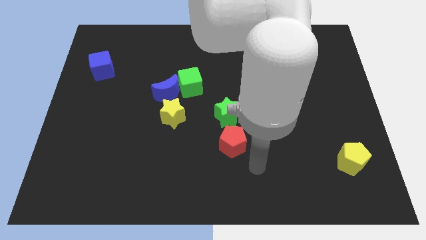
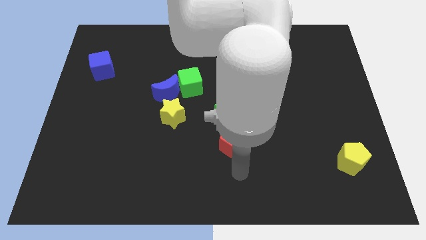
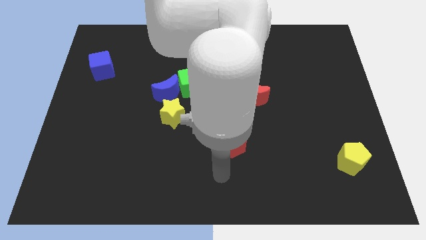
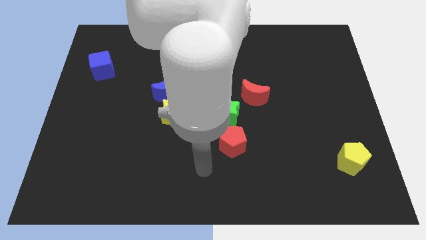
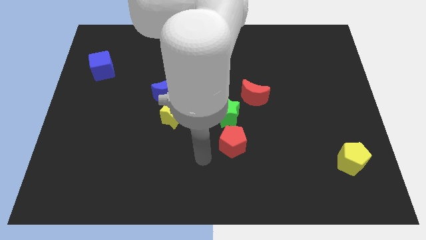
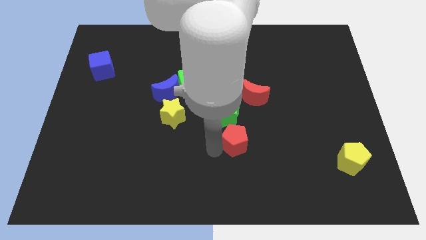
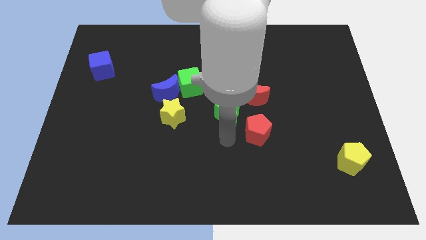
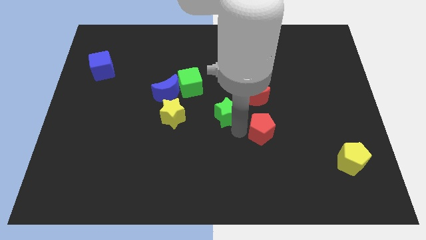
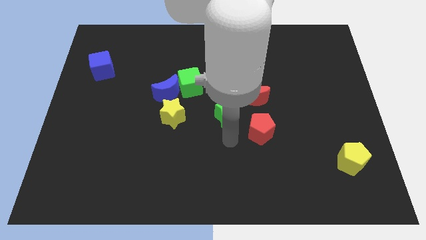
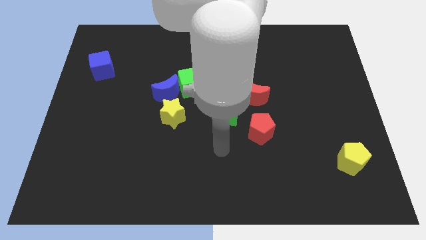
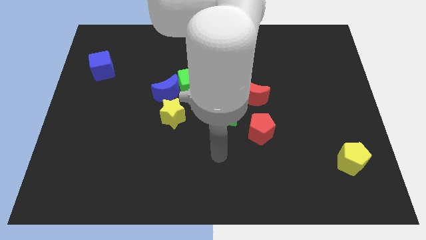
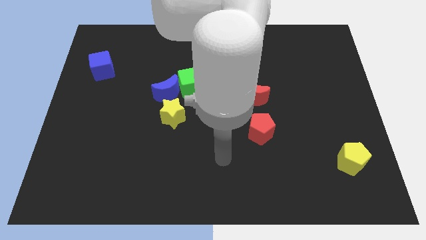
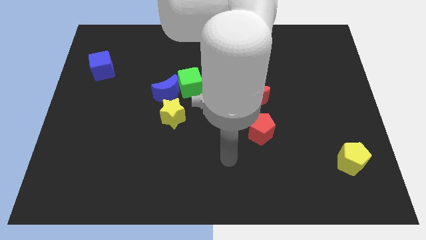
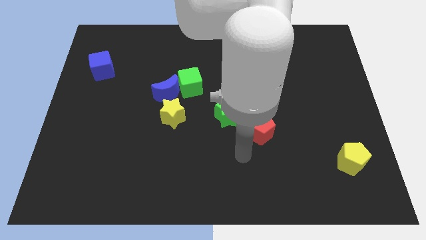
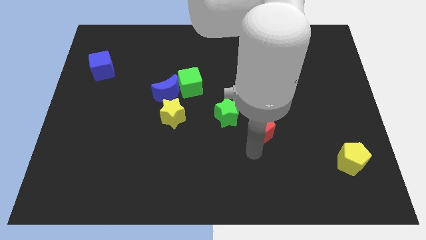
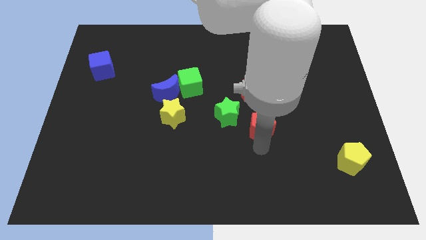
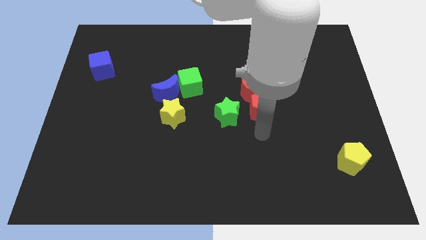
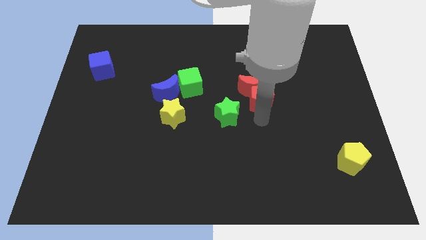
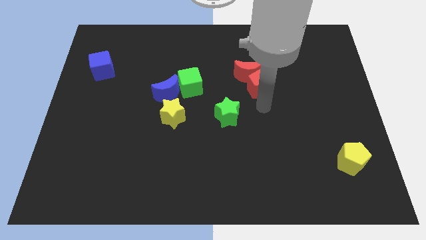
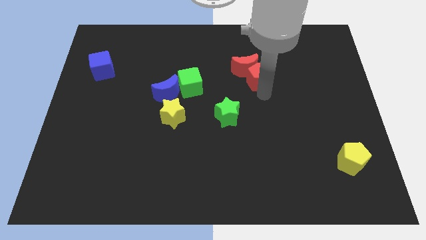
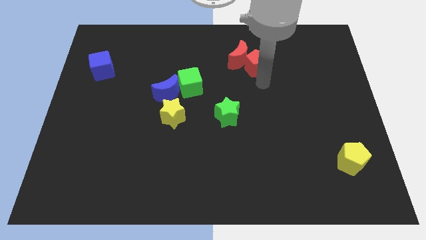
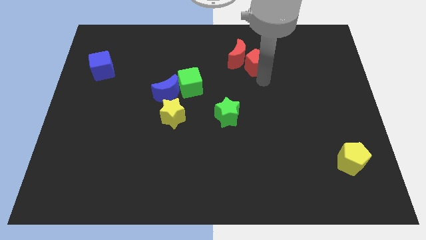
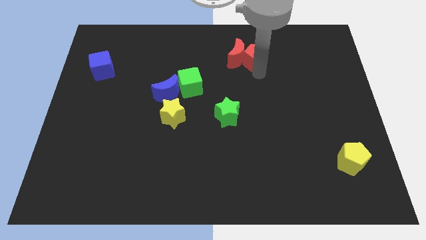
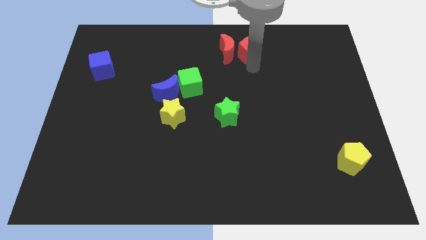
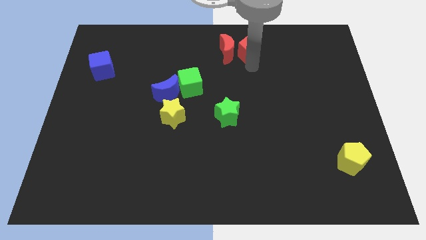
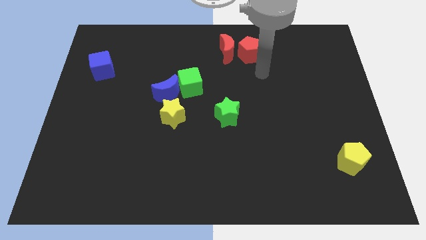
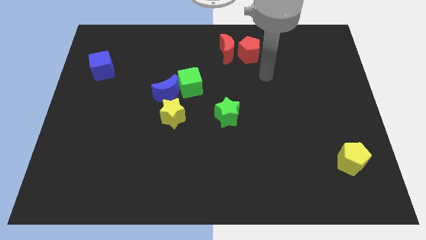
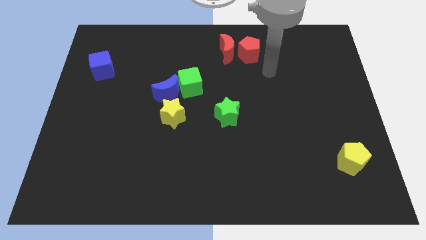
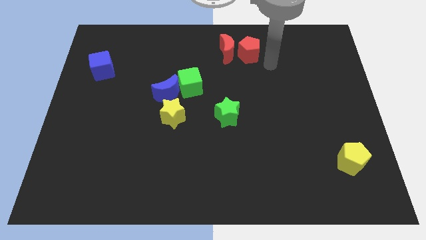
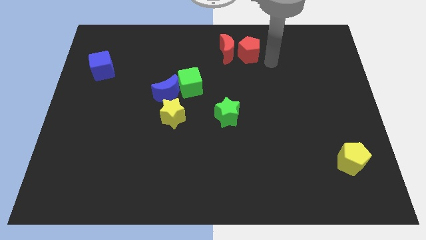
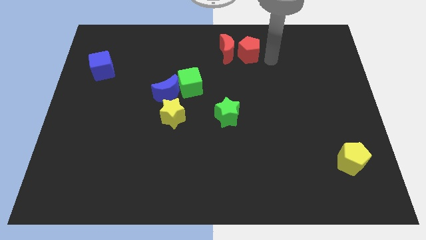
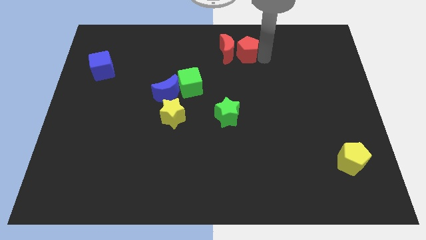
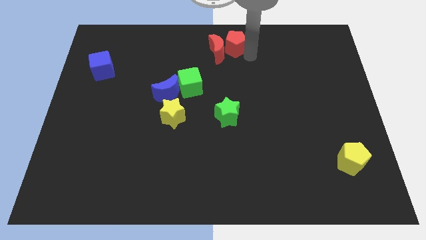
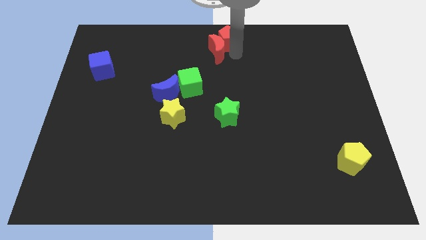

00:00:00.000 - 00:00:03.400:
put the red pentagon at the top center of the board

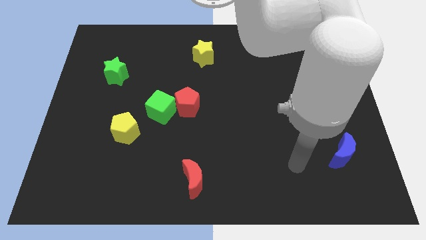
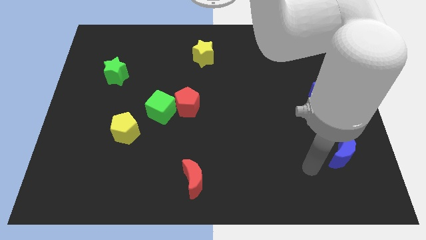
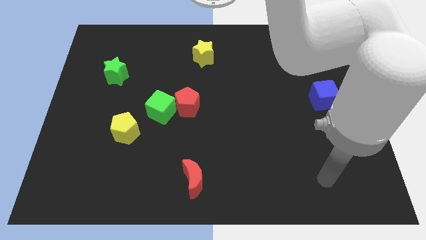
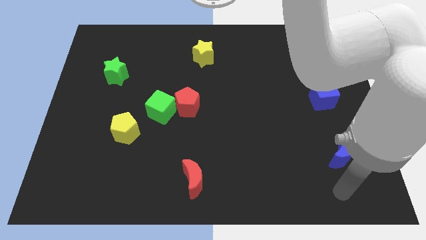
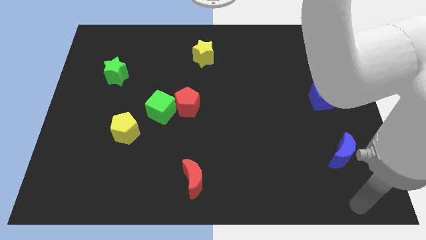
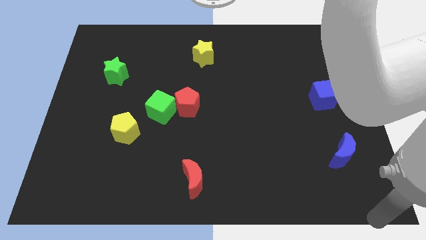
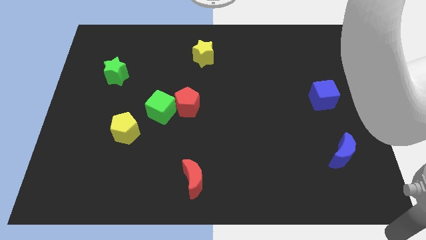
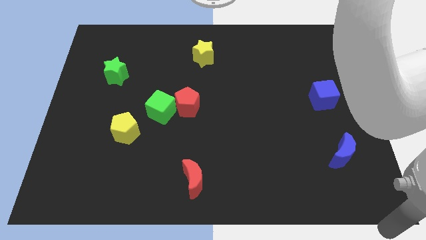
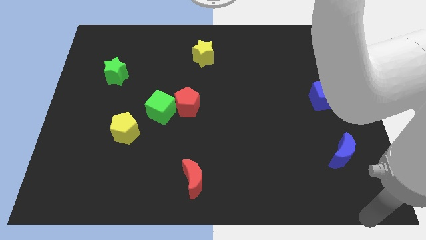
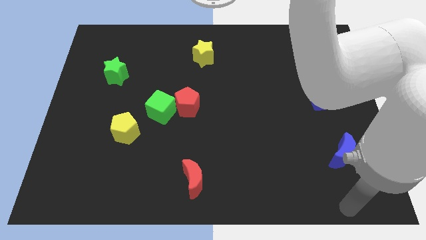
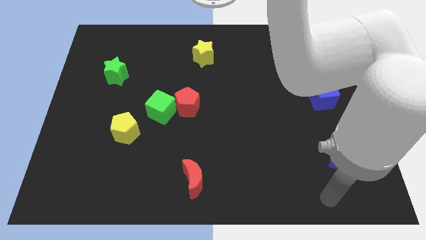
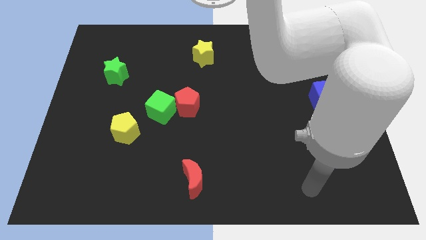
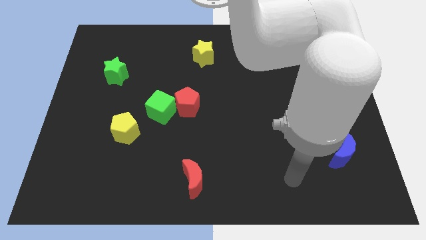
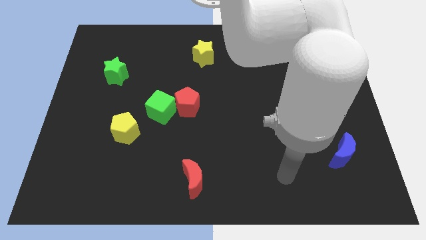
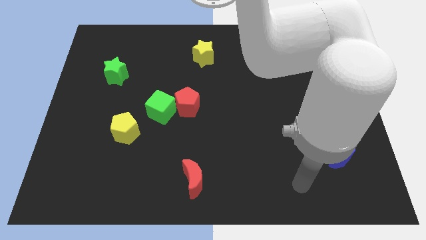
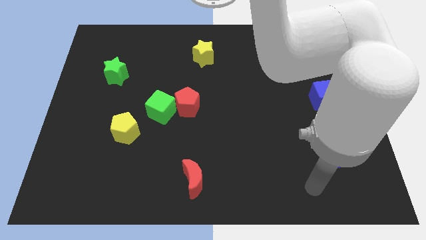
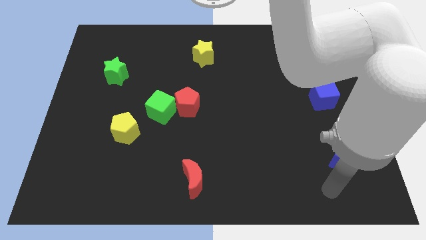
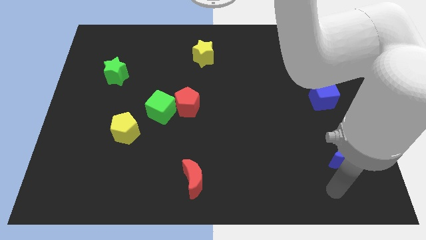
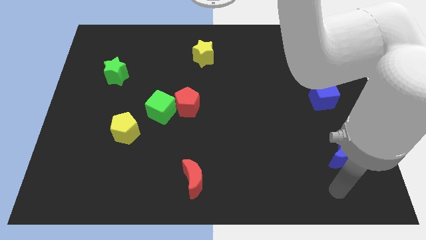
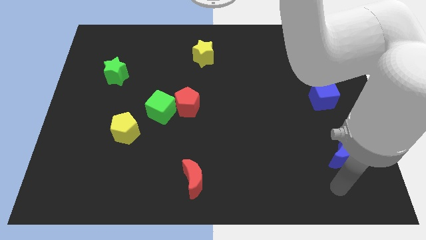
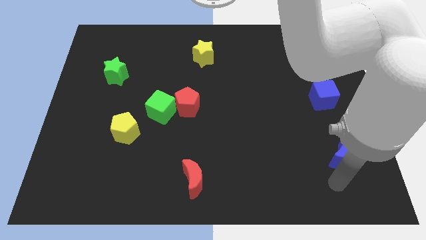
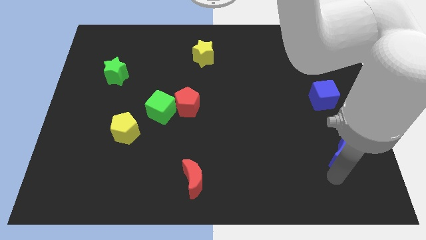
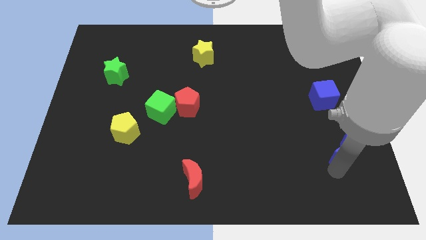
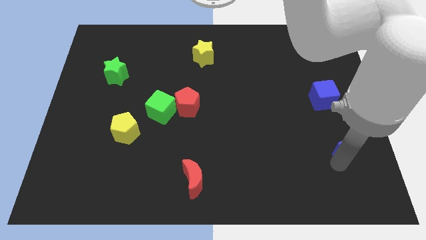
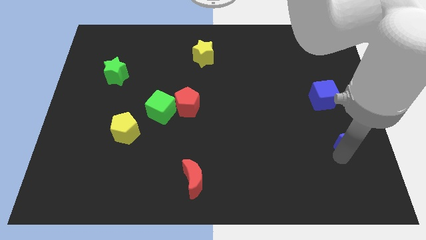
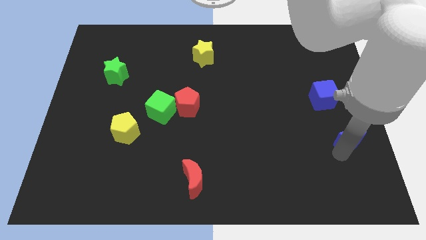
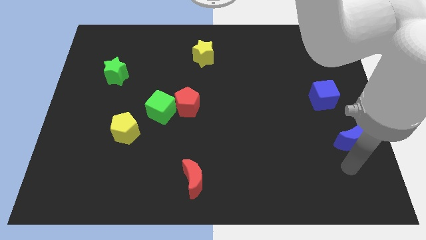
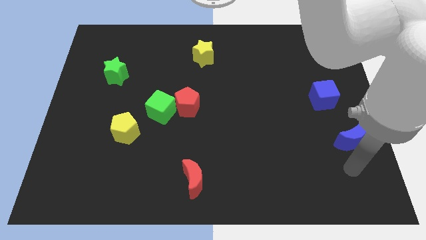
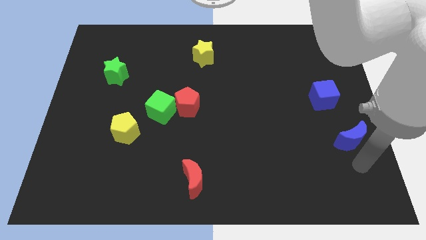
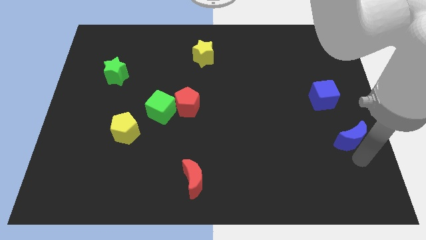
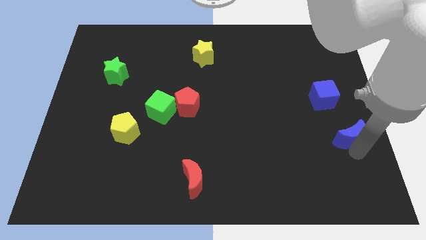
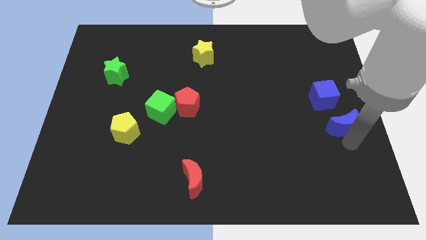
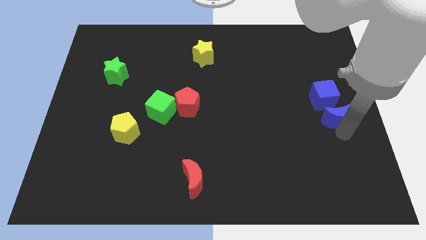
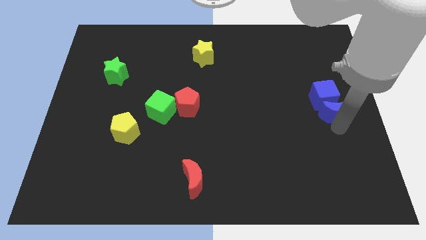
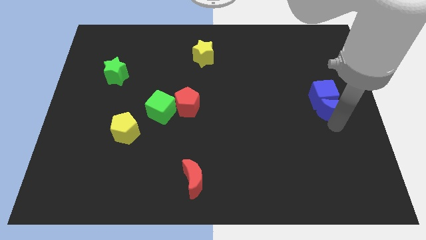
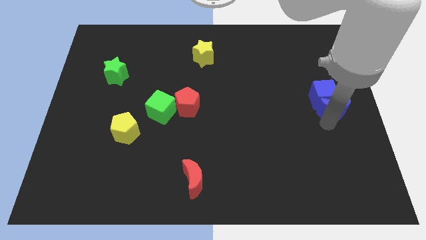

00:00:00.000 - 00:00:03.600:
slide the blue crescent into the bottom side of the blue cube

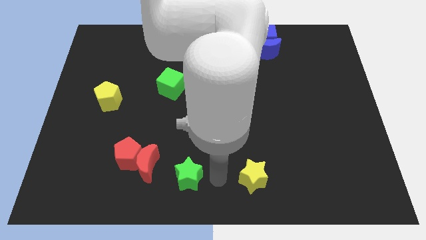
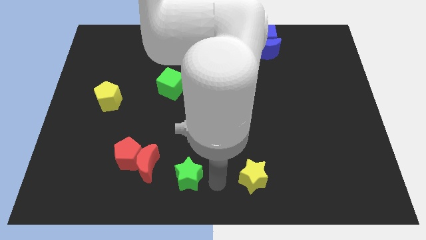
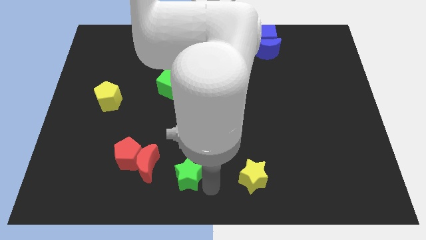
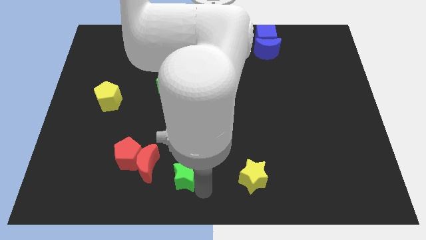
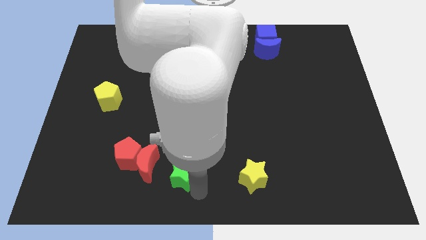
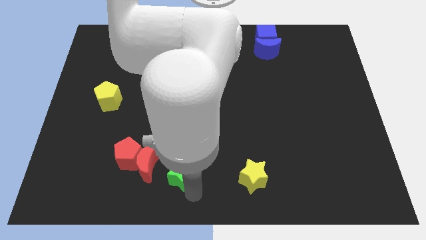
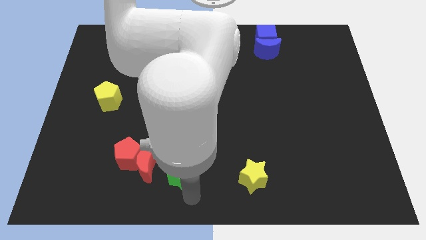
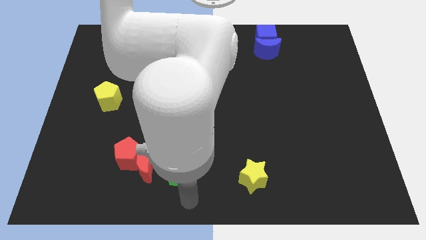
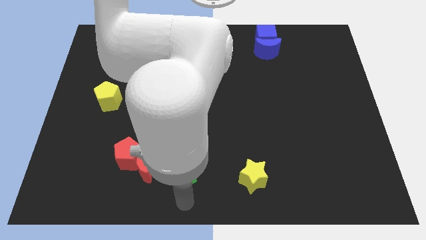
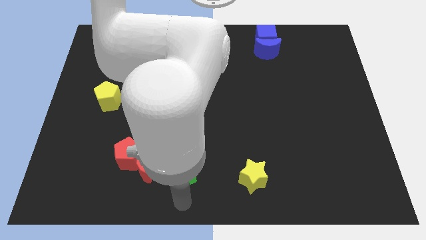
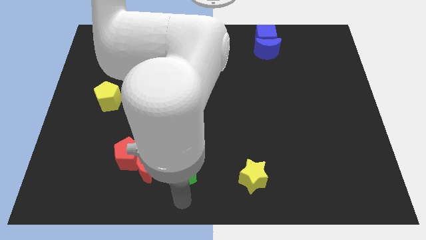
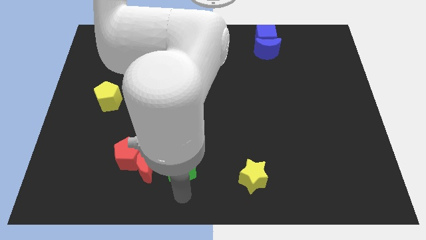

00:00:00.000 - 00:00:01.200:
move the green star towards the red moon

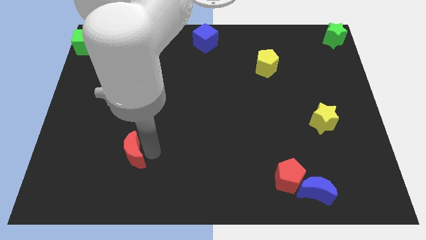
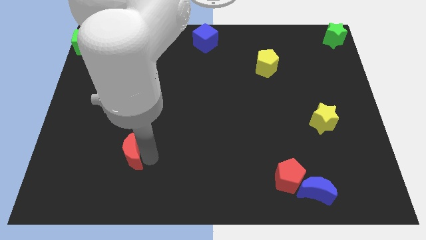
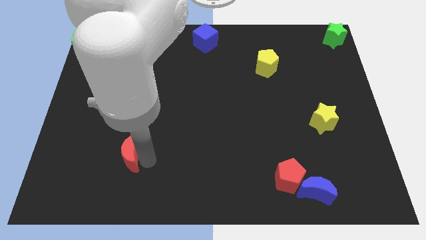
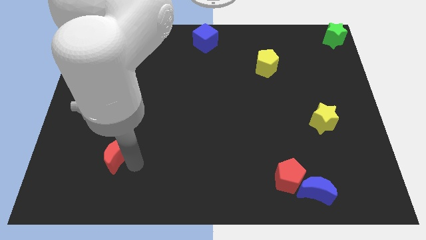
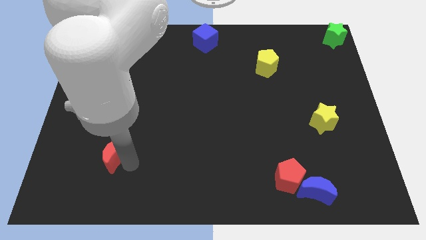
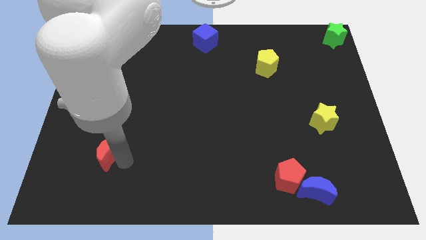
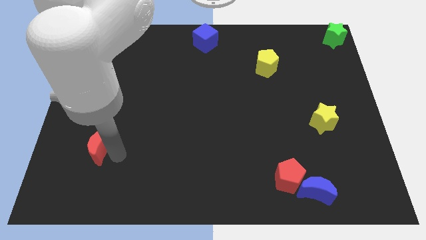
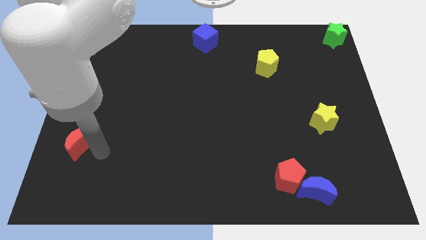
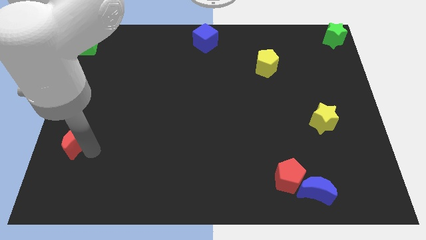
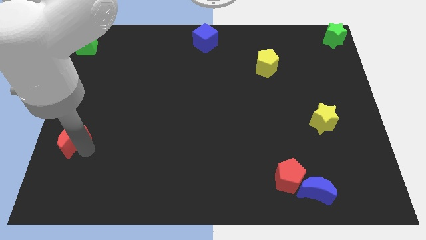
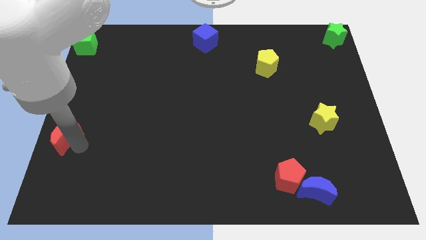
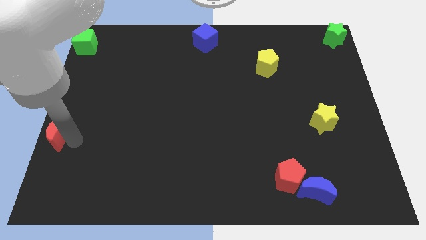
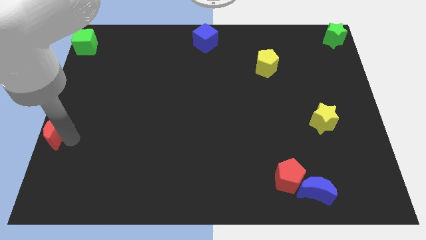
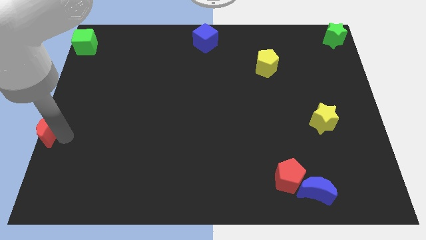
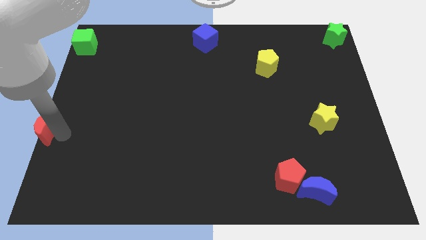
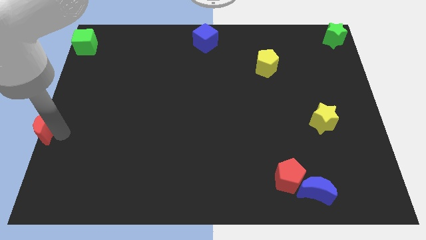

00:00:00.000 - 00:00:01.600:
place red crescent to the left center of the board
